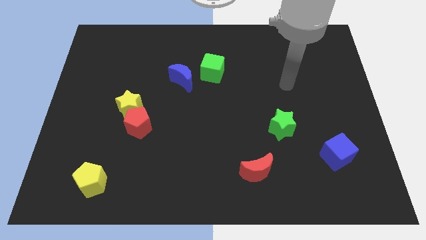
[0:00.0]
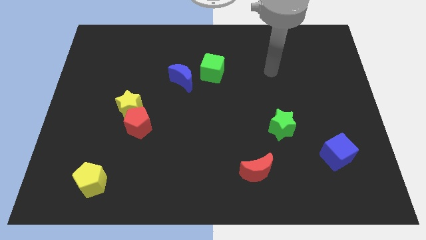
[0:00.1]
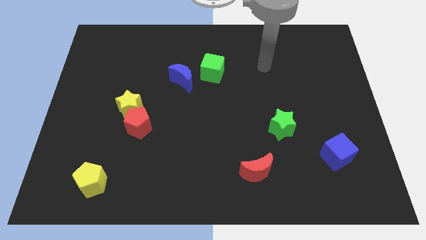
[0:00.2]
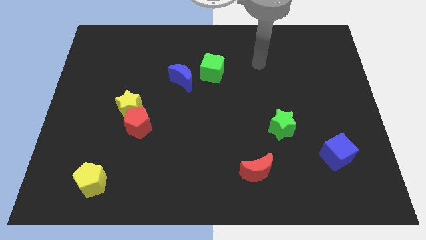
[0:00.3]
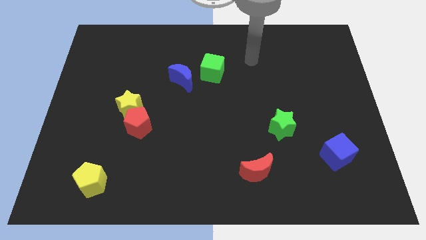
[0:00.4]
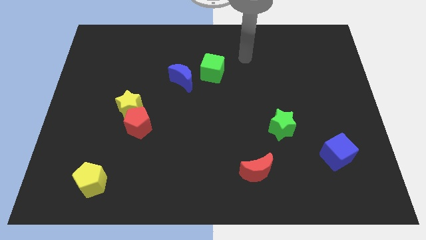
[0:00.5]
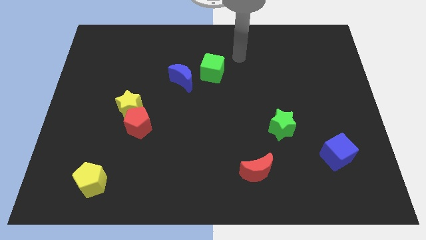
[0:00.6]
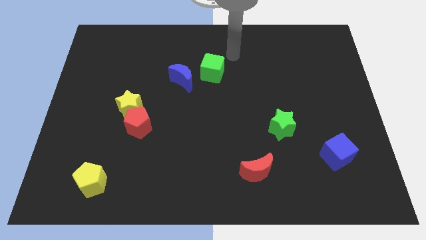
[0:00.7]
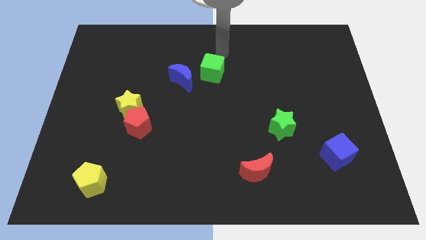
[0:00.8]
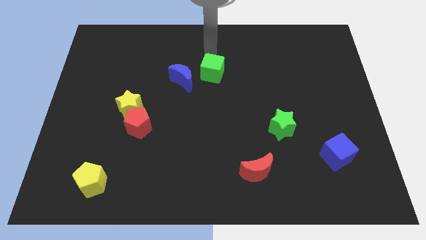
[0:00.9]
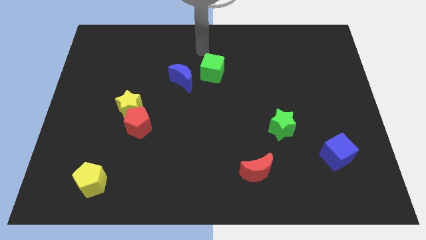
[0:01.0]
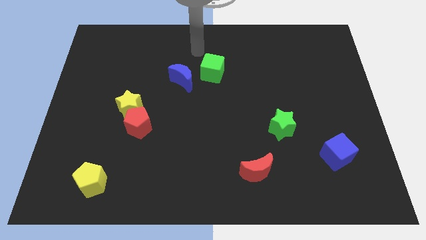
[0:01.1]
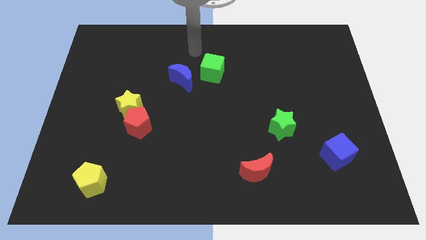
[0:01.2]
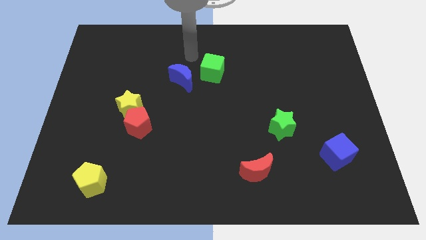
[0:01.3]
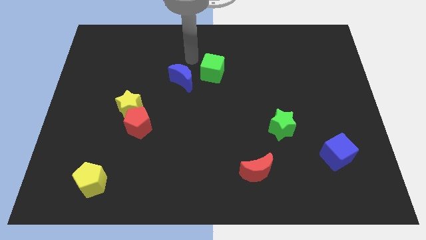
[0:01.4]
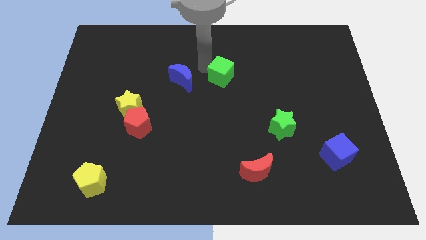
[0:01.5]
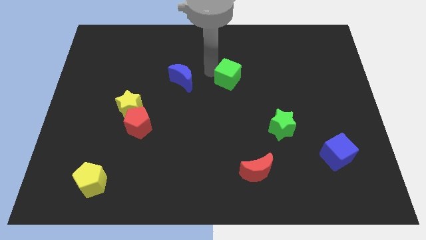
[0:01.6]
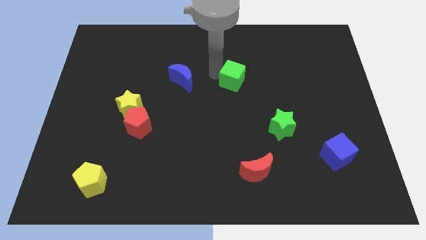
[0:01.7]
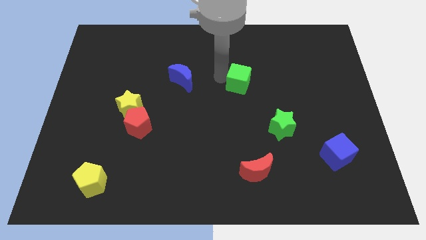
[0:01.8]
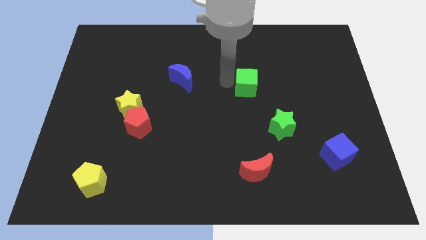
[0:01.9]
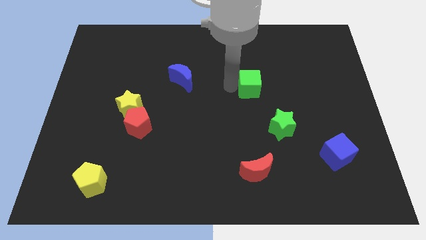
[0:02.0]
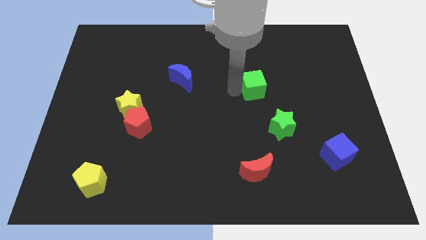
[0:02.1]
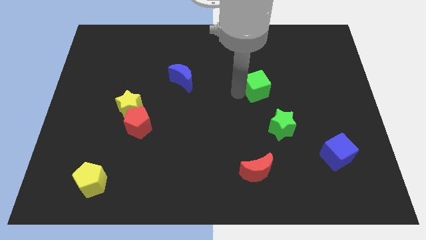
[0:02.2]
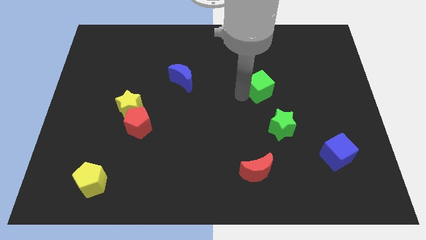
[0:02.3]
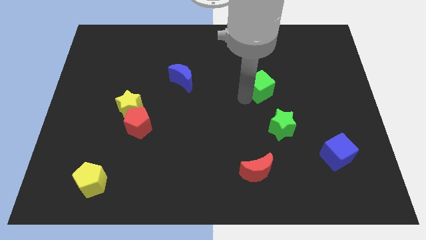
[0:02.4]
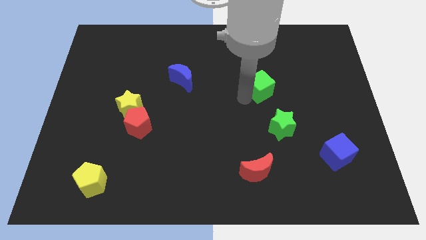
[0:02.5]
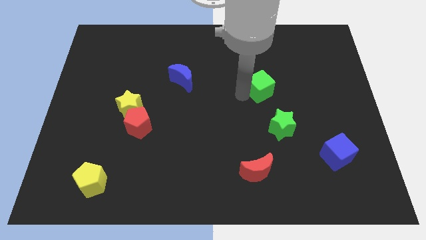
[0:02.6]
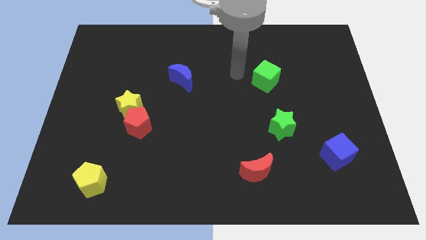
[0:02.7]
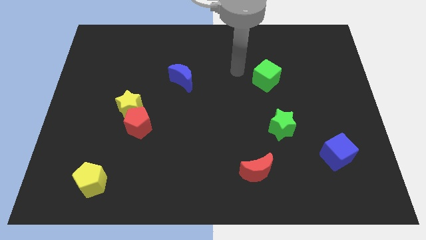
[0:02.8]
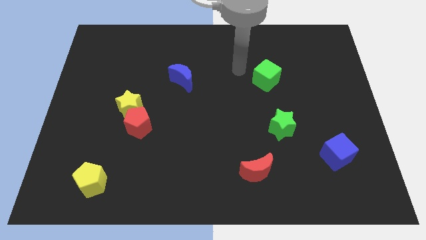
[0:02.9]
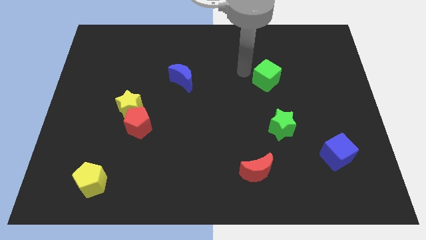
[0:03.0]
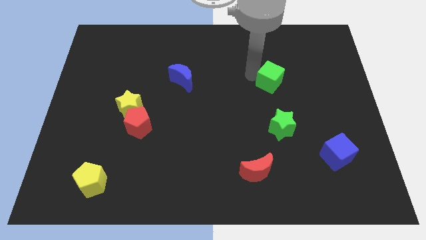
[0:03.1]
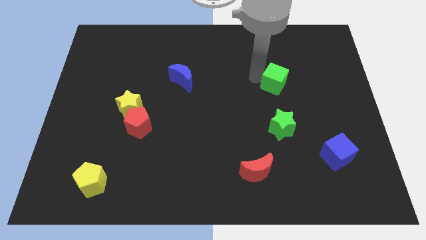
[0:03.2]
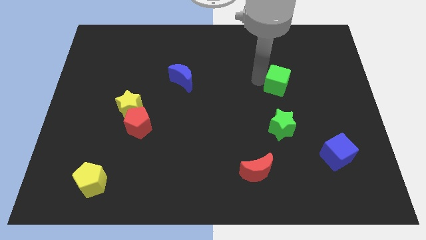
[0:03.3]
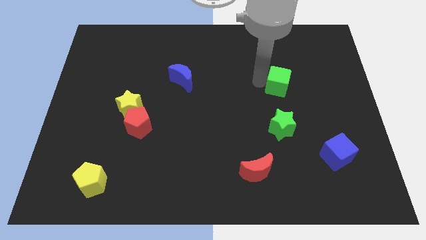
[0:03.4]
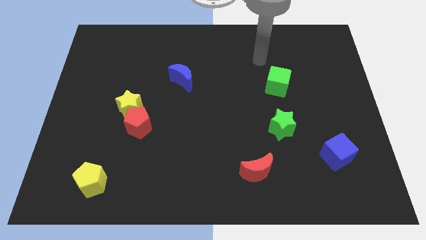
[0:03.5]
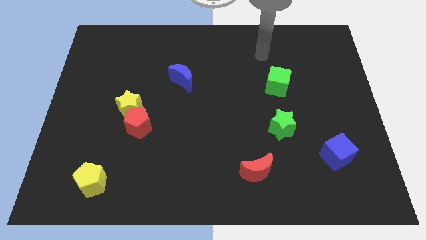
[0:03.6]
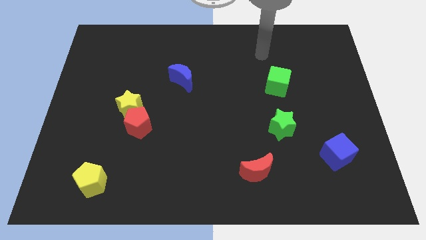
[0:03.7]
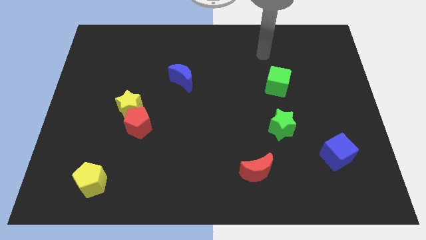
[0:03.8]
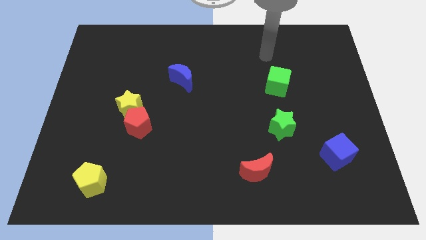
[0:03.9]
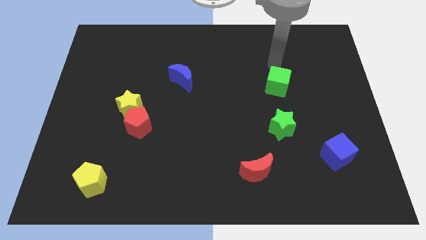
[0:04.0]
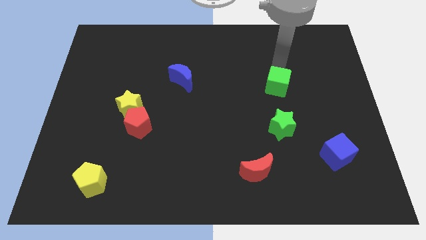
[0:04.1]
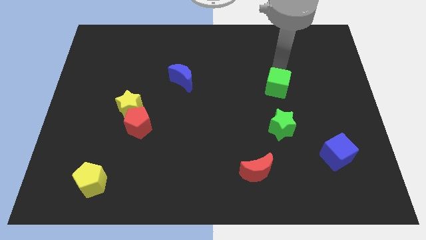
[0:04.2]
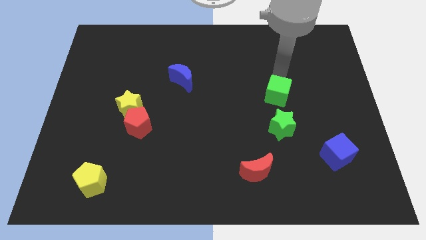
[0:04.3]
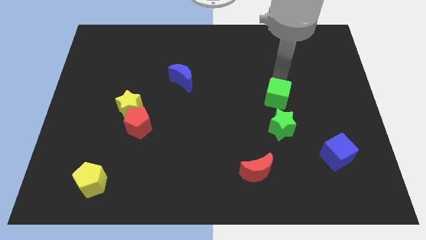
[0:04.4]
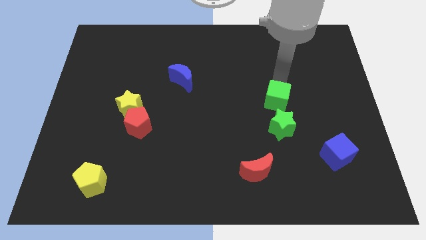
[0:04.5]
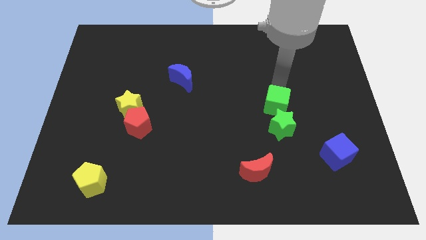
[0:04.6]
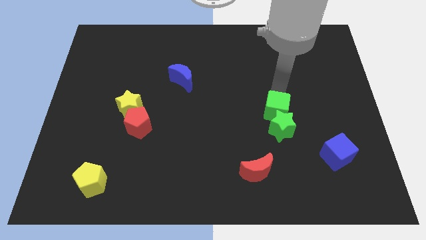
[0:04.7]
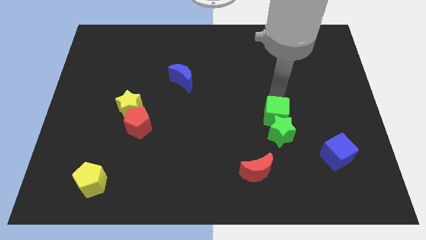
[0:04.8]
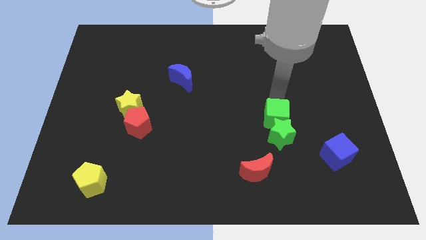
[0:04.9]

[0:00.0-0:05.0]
push the green cube to the green star

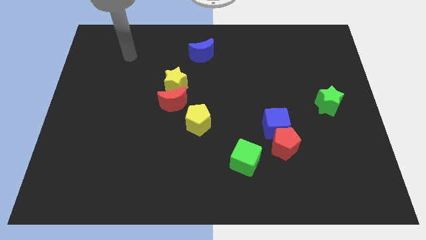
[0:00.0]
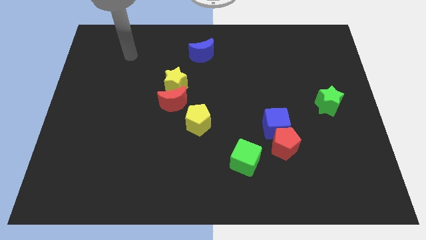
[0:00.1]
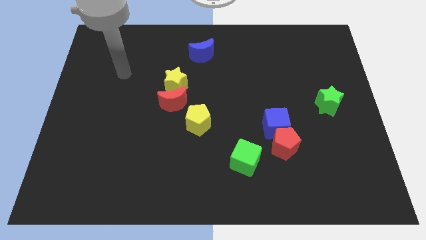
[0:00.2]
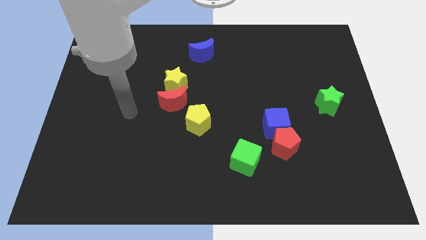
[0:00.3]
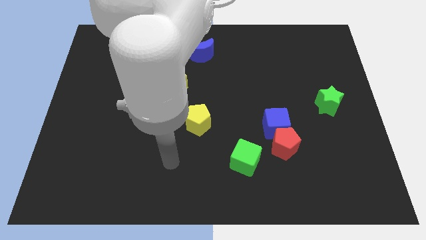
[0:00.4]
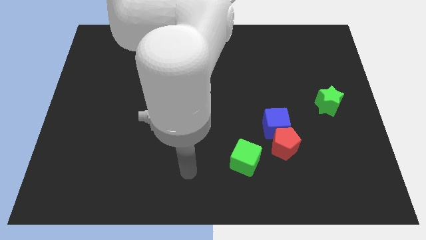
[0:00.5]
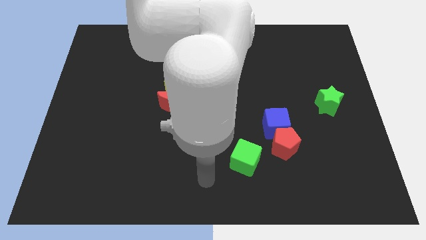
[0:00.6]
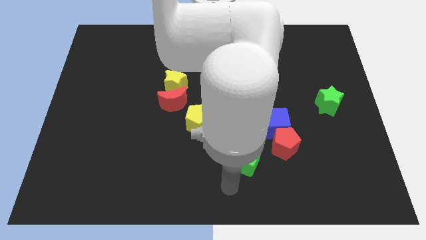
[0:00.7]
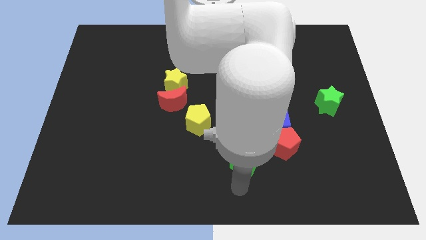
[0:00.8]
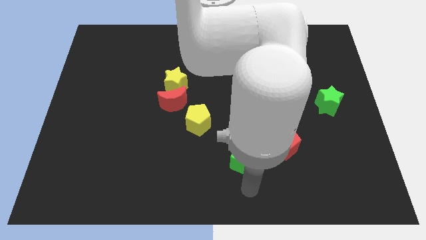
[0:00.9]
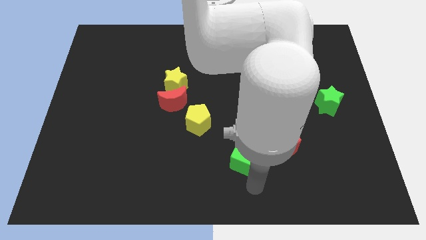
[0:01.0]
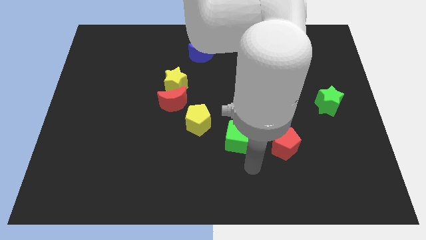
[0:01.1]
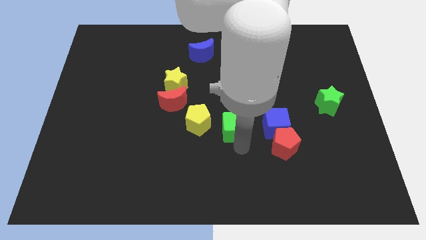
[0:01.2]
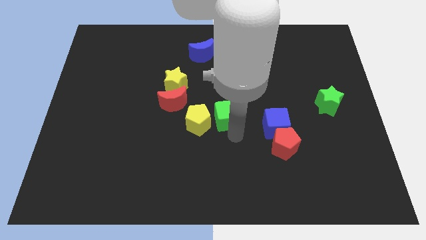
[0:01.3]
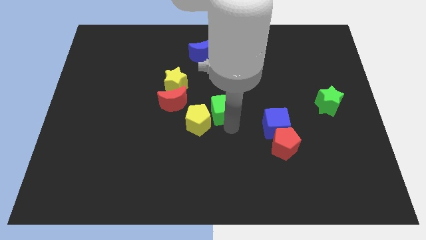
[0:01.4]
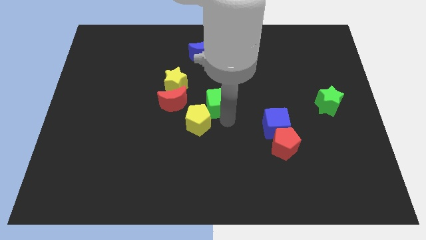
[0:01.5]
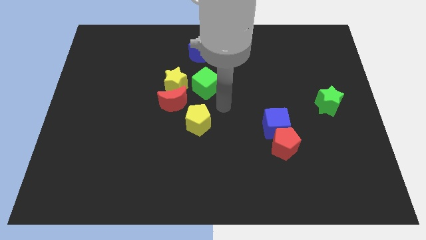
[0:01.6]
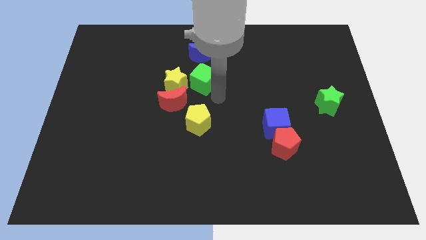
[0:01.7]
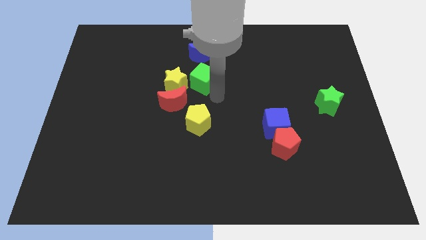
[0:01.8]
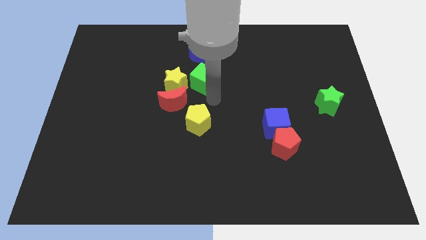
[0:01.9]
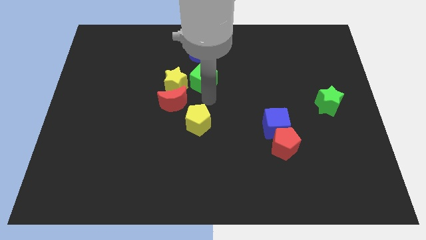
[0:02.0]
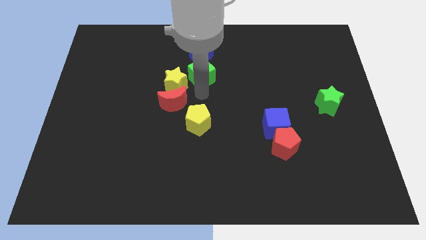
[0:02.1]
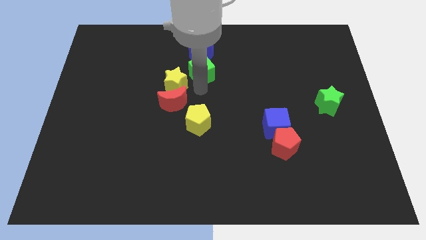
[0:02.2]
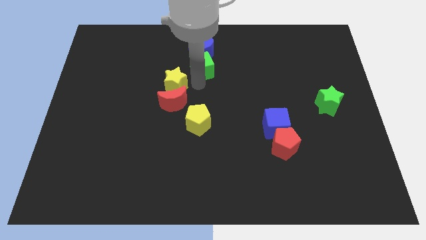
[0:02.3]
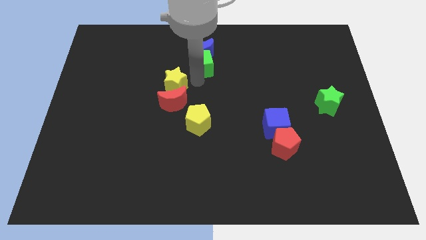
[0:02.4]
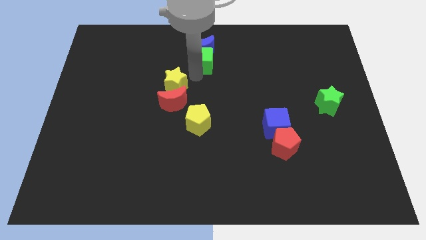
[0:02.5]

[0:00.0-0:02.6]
move the green cube towards the blue moon

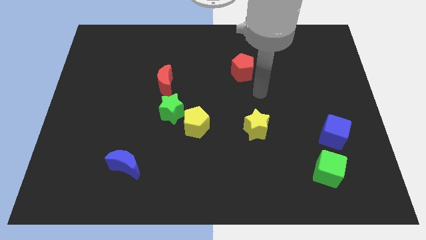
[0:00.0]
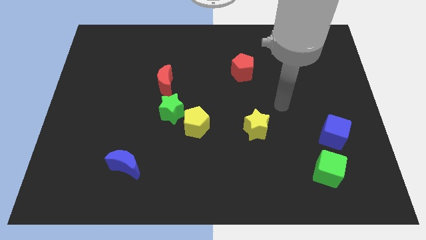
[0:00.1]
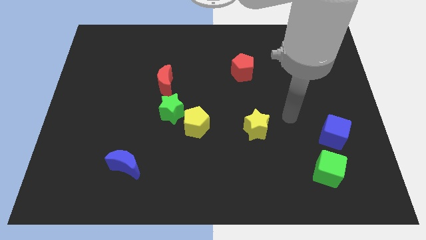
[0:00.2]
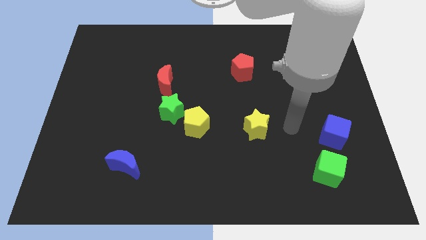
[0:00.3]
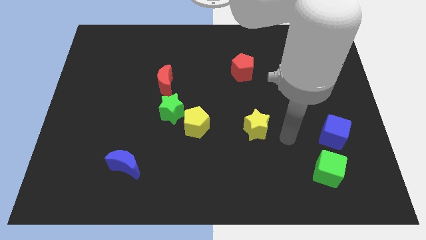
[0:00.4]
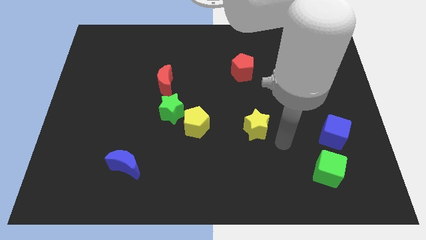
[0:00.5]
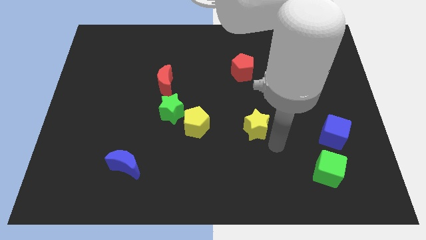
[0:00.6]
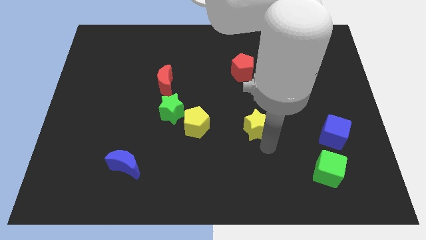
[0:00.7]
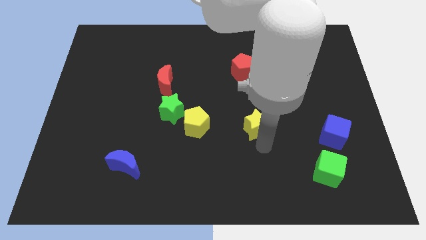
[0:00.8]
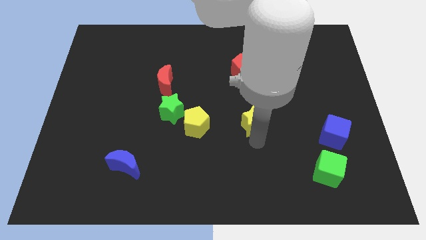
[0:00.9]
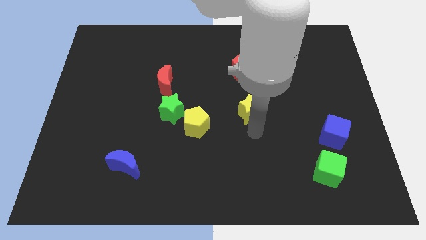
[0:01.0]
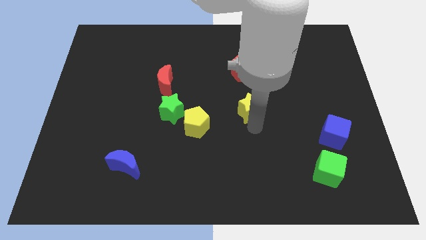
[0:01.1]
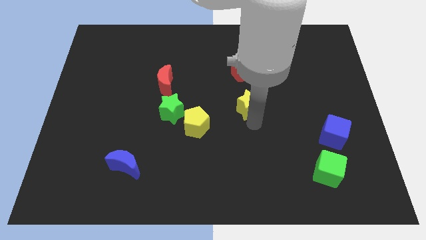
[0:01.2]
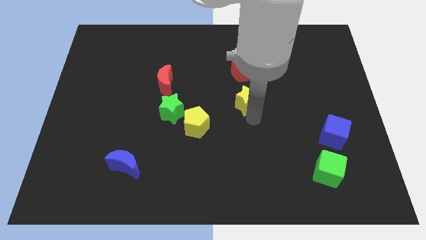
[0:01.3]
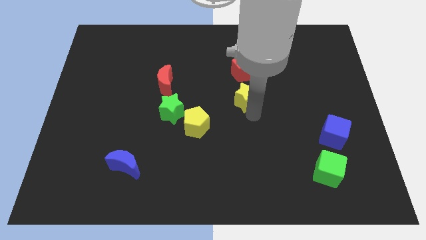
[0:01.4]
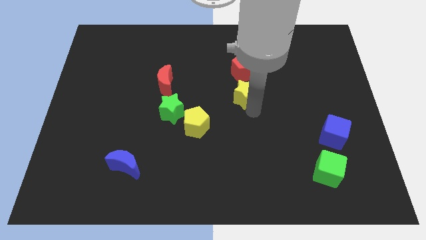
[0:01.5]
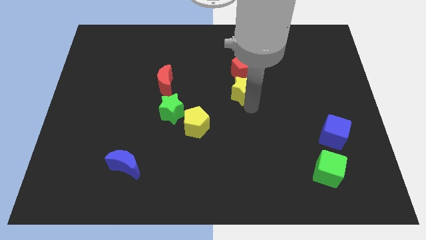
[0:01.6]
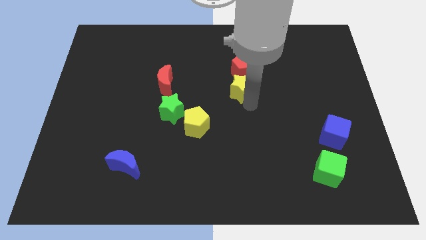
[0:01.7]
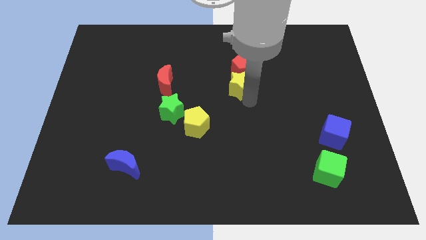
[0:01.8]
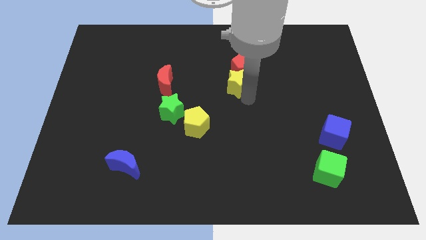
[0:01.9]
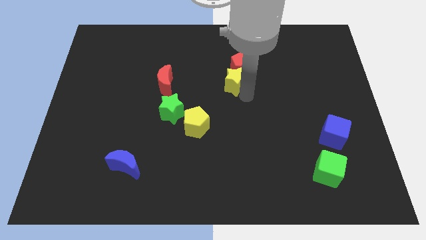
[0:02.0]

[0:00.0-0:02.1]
push the yellow star to the red pentagon
